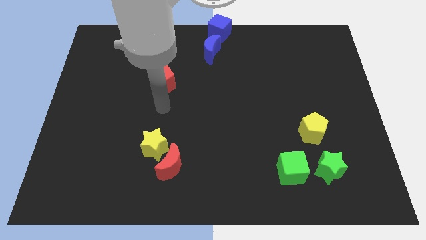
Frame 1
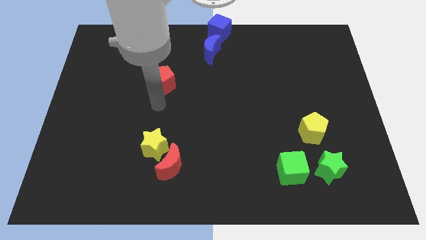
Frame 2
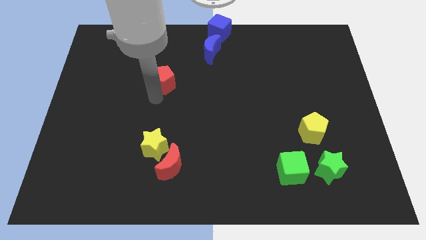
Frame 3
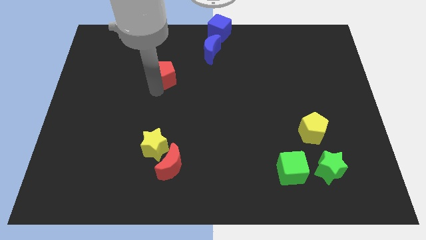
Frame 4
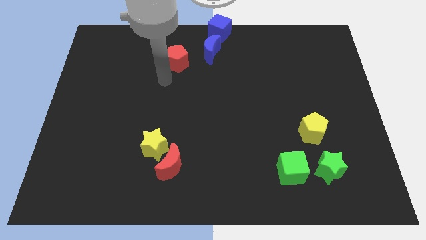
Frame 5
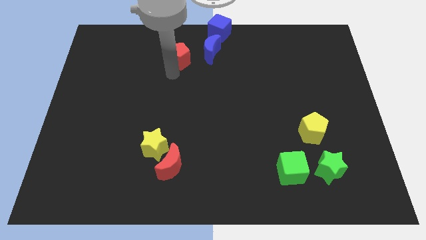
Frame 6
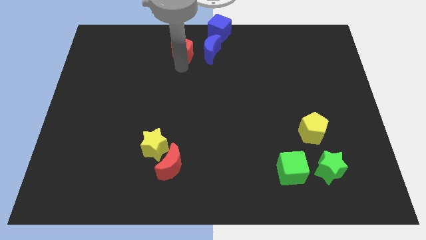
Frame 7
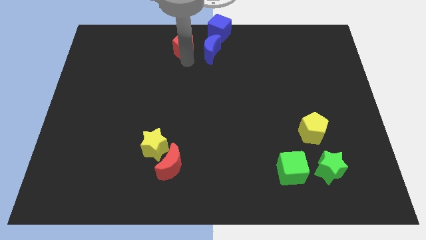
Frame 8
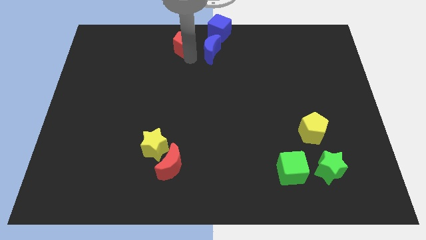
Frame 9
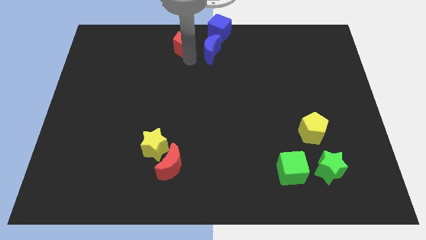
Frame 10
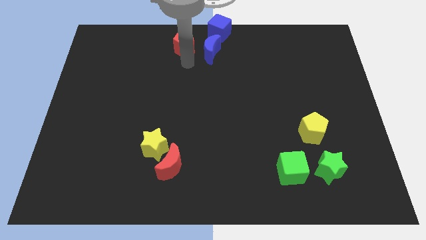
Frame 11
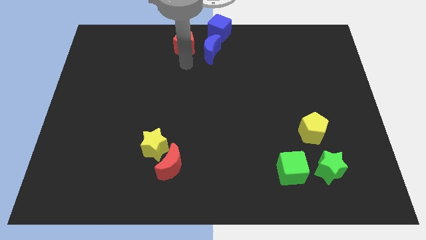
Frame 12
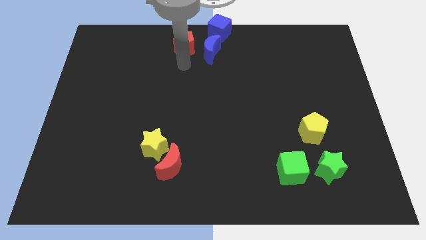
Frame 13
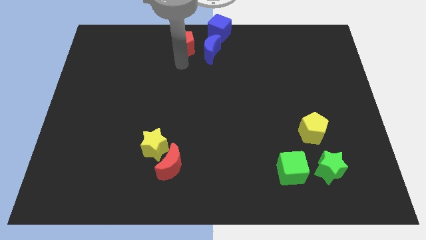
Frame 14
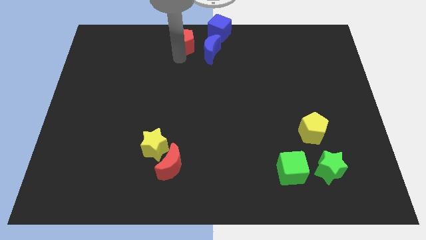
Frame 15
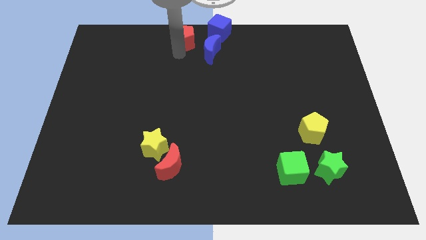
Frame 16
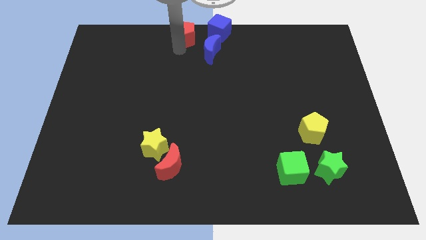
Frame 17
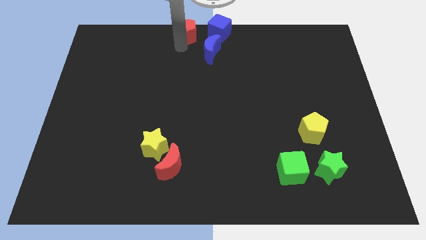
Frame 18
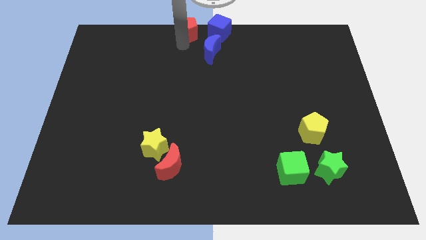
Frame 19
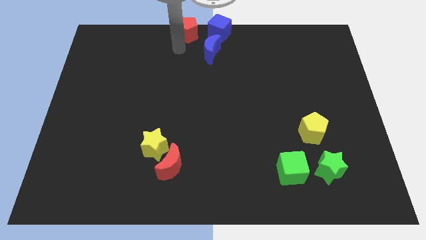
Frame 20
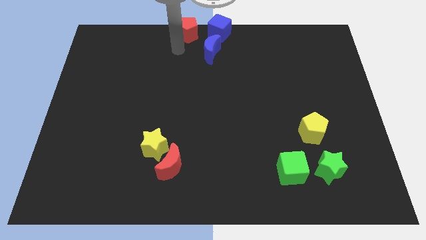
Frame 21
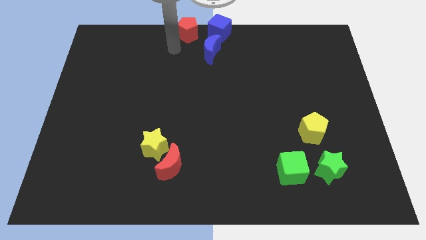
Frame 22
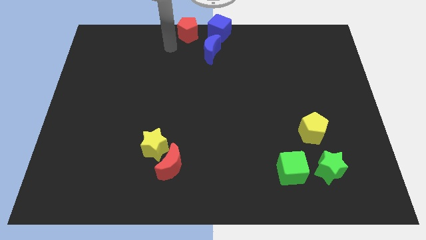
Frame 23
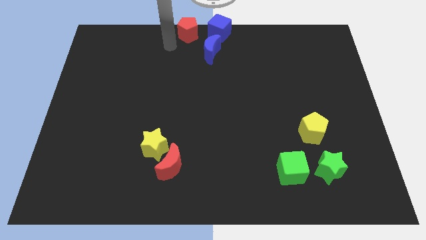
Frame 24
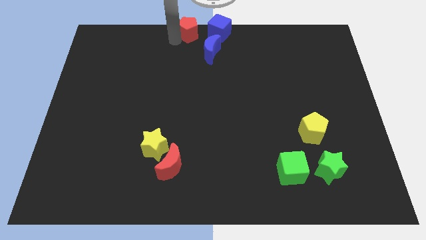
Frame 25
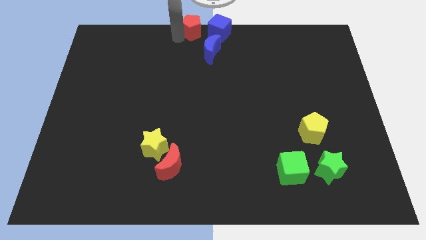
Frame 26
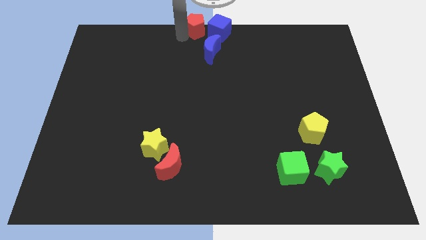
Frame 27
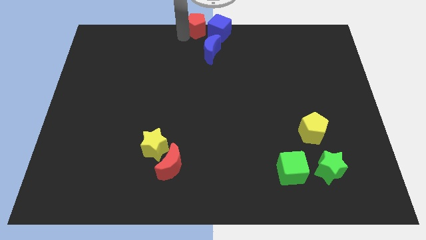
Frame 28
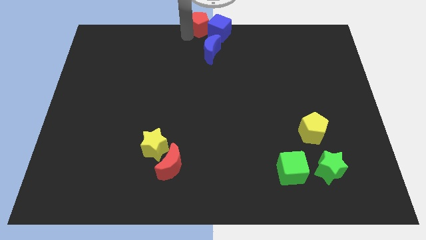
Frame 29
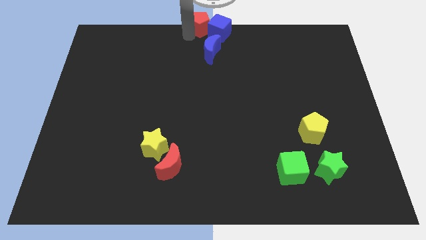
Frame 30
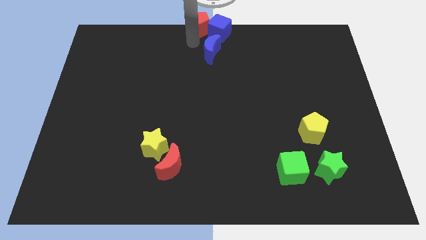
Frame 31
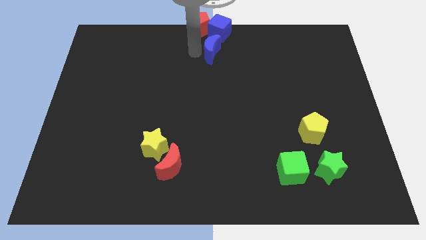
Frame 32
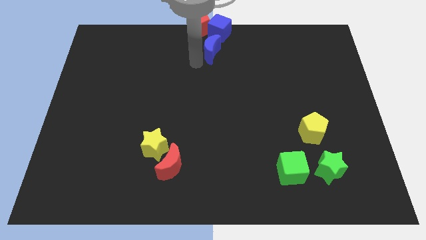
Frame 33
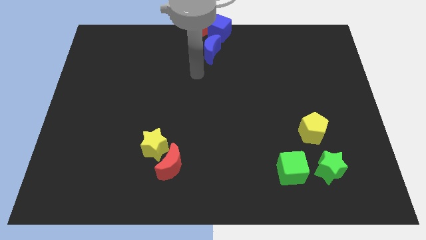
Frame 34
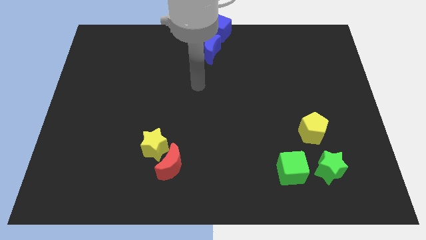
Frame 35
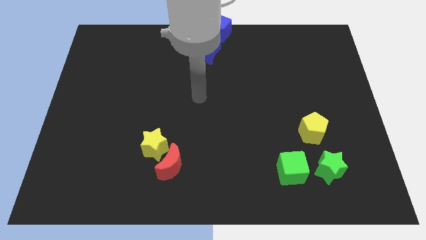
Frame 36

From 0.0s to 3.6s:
place red pentagon adjacent to blue cube

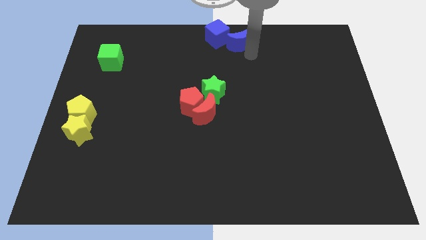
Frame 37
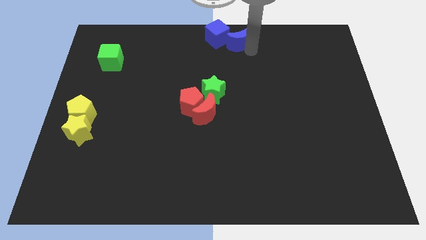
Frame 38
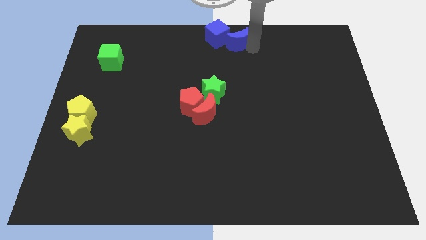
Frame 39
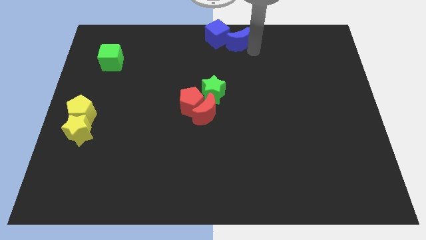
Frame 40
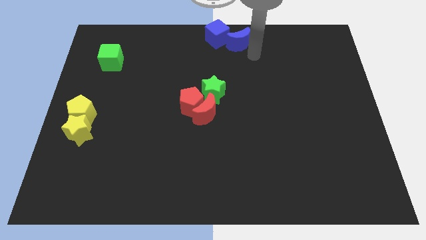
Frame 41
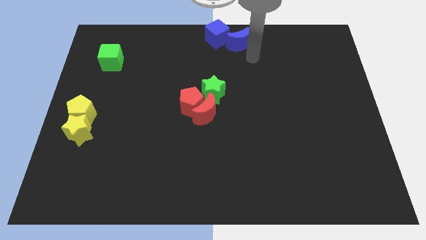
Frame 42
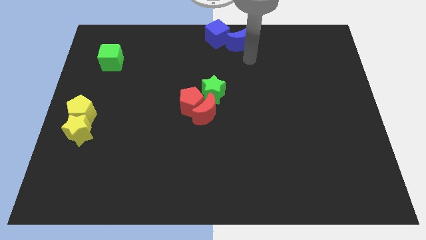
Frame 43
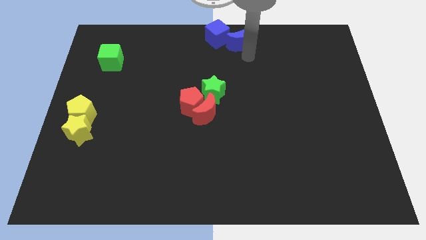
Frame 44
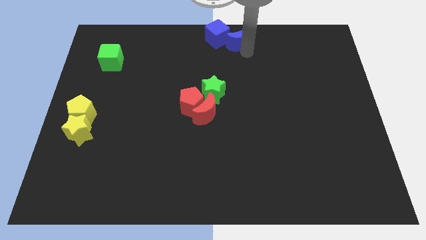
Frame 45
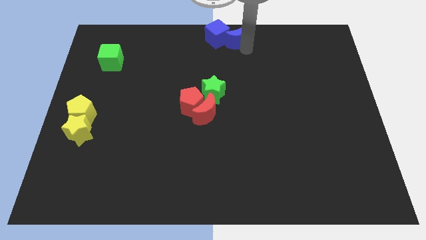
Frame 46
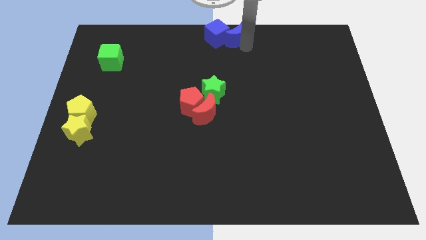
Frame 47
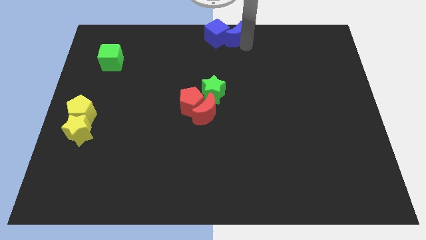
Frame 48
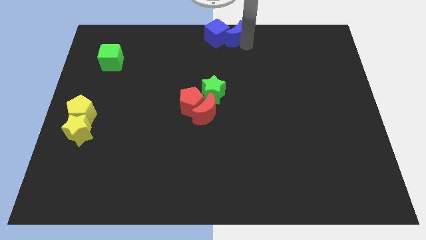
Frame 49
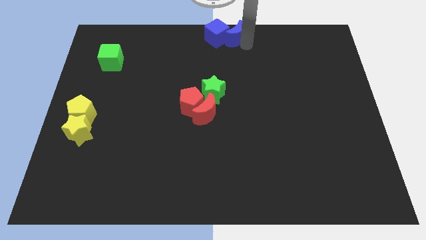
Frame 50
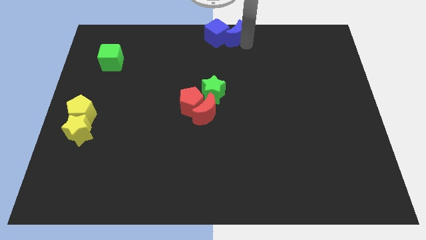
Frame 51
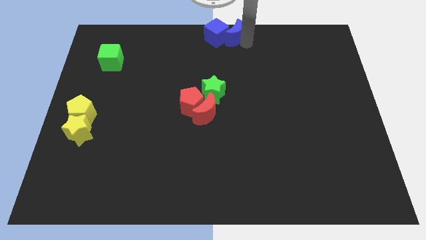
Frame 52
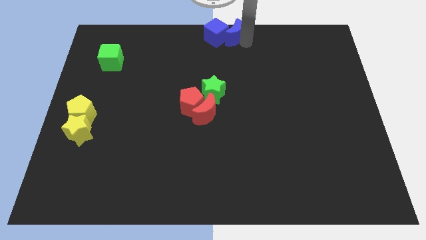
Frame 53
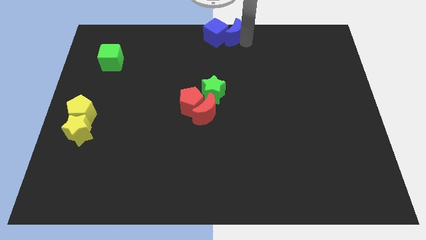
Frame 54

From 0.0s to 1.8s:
move the blue crescent right to the blue cube

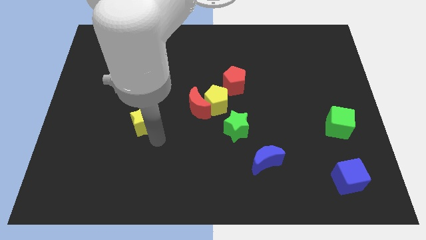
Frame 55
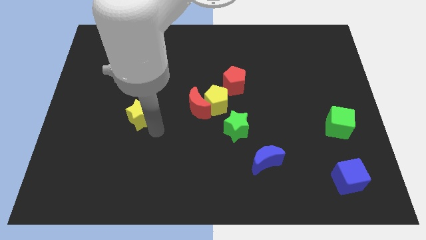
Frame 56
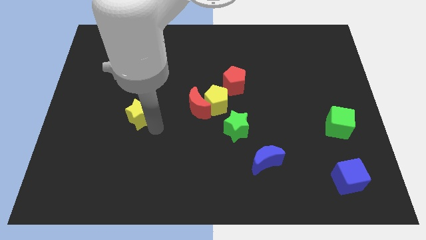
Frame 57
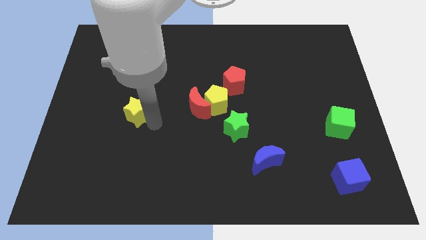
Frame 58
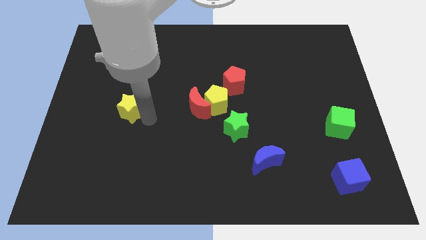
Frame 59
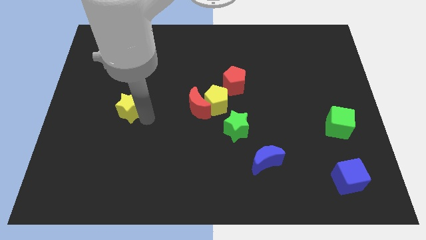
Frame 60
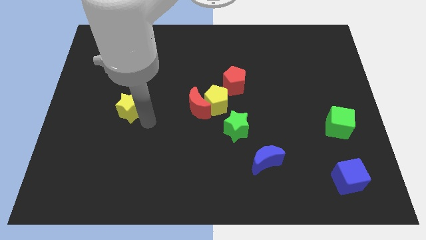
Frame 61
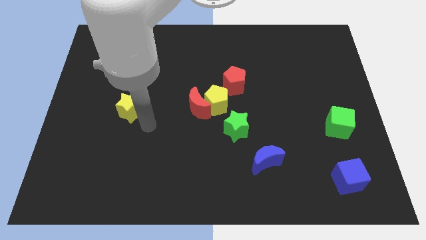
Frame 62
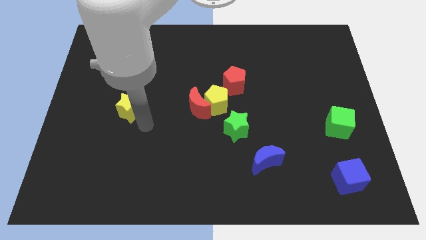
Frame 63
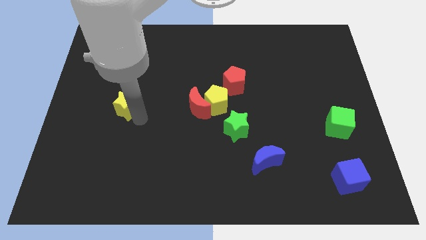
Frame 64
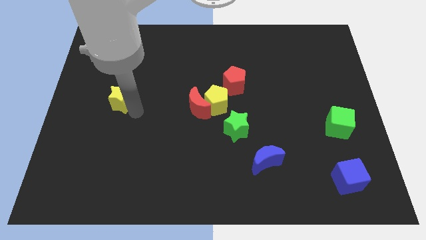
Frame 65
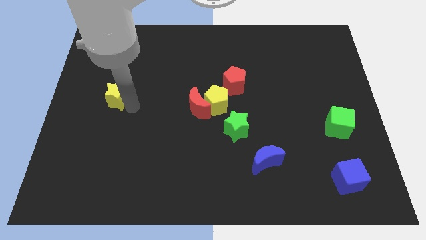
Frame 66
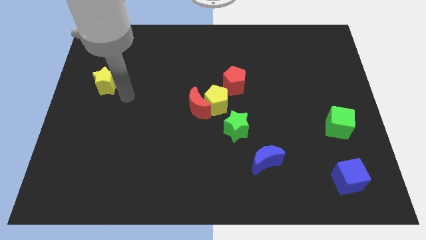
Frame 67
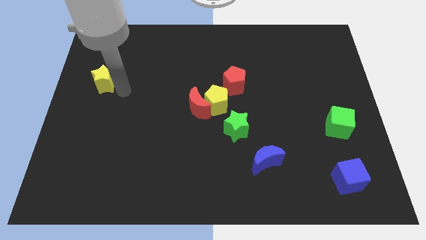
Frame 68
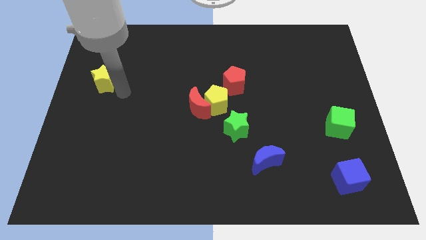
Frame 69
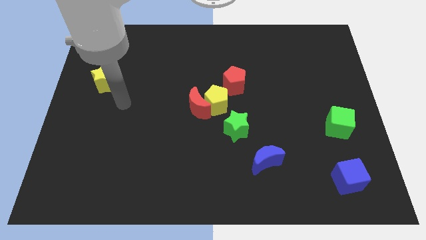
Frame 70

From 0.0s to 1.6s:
slightly push the yellow star towards the top left corner of the board

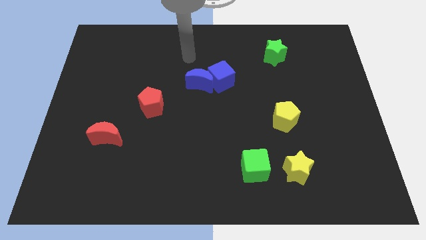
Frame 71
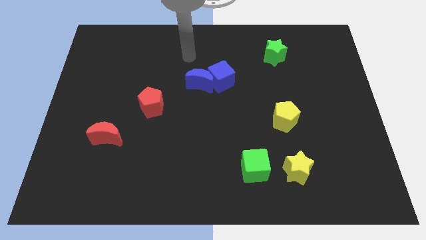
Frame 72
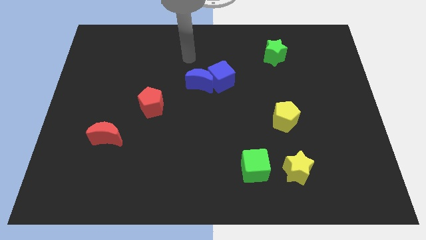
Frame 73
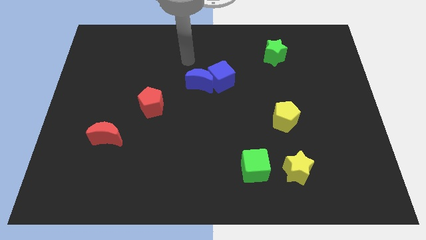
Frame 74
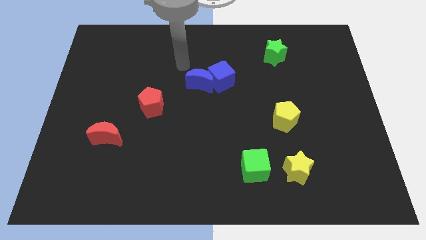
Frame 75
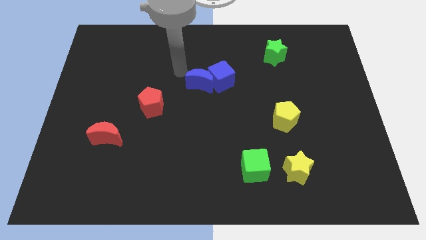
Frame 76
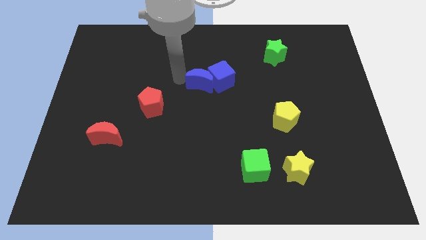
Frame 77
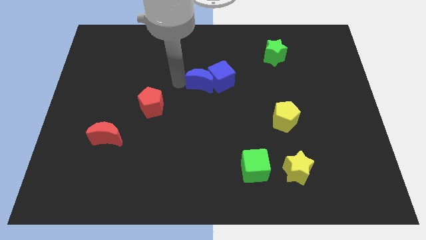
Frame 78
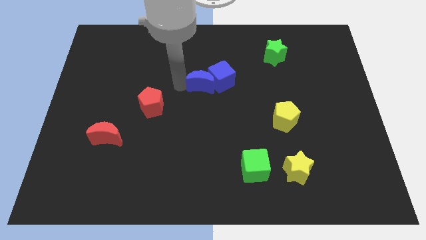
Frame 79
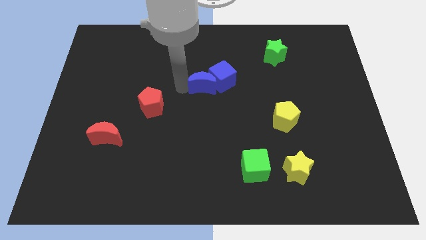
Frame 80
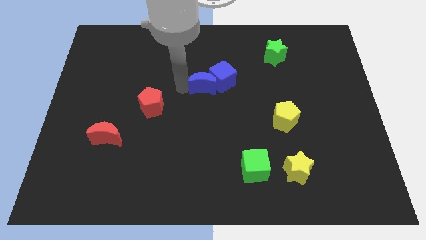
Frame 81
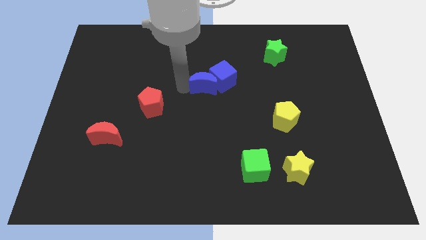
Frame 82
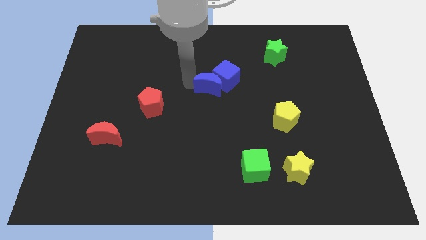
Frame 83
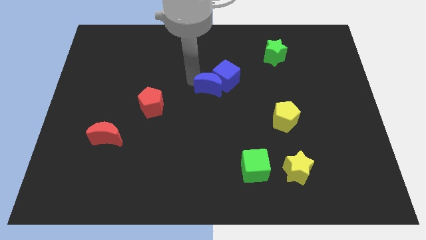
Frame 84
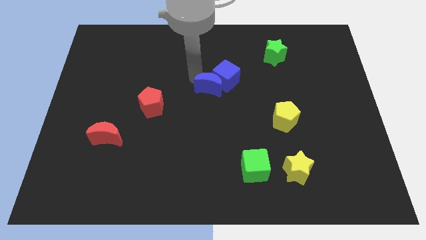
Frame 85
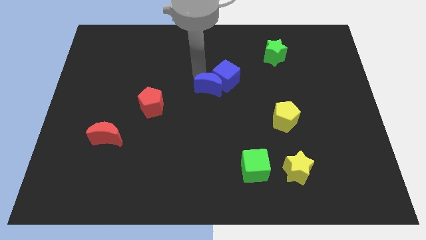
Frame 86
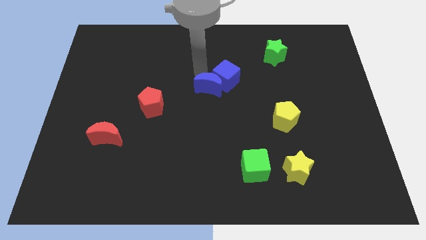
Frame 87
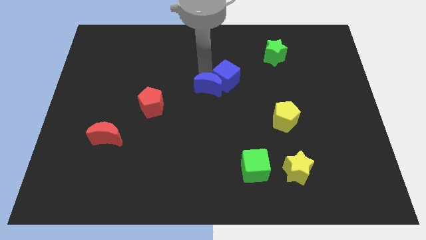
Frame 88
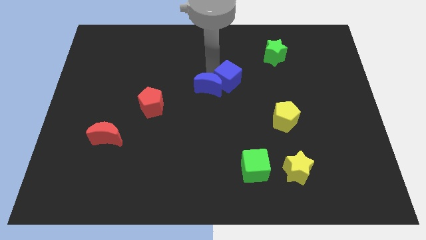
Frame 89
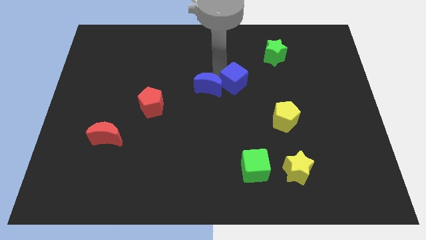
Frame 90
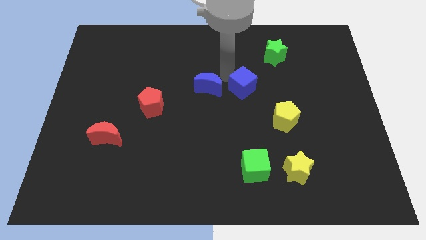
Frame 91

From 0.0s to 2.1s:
separate blue cube from the blue moon
